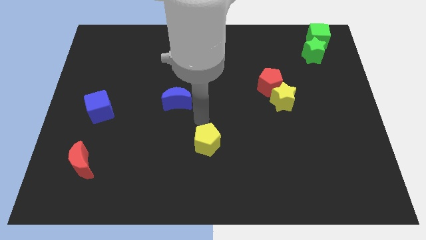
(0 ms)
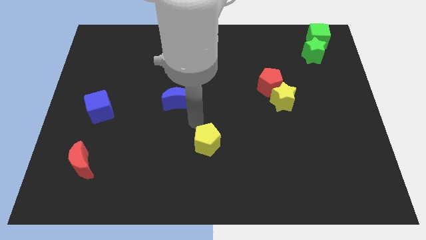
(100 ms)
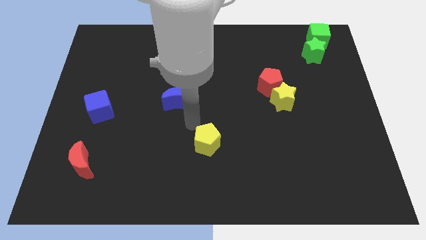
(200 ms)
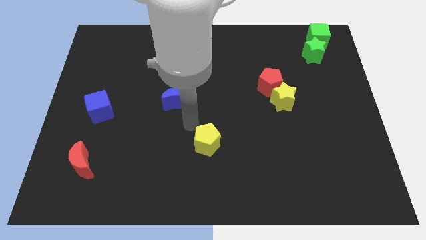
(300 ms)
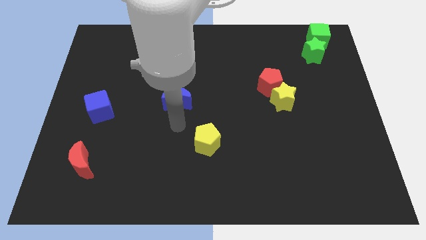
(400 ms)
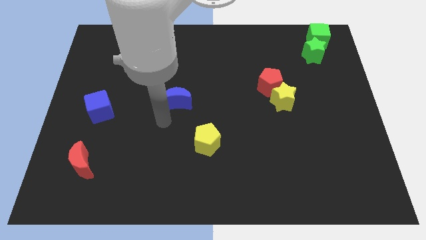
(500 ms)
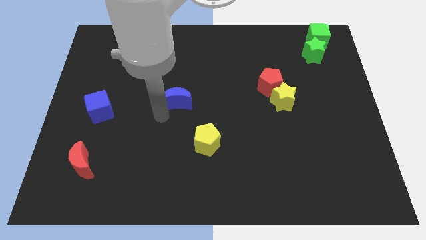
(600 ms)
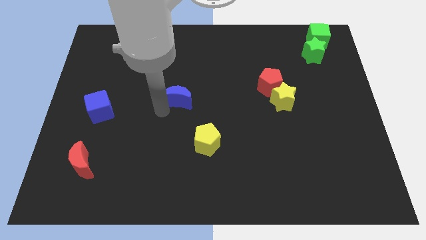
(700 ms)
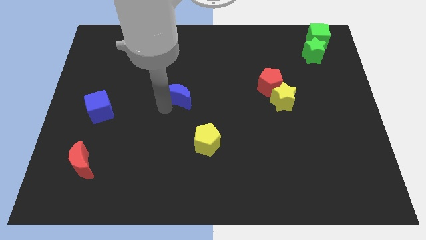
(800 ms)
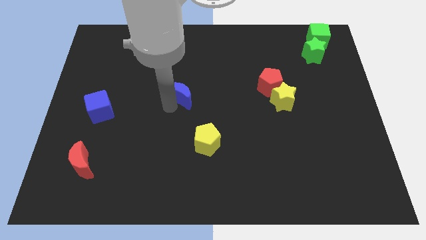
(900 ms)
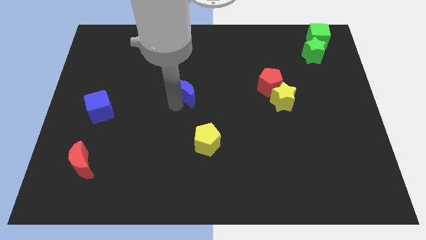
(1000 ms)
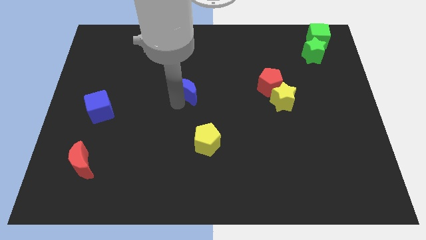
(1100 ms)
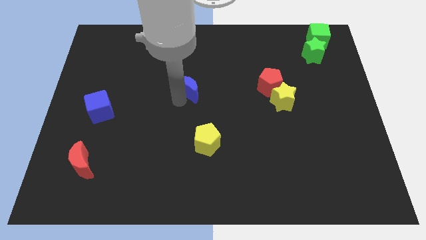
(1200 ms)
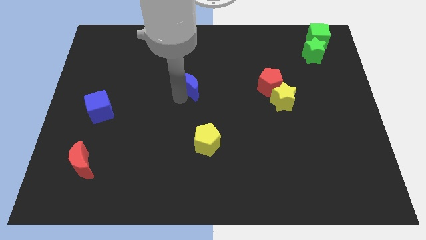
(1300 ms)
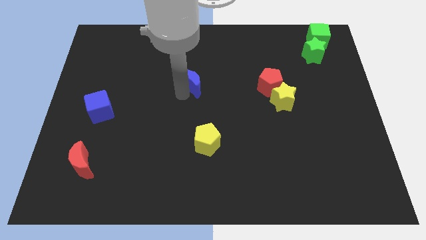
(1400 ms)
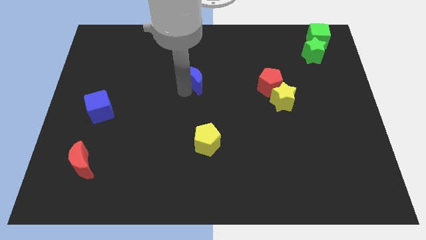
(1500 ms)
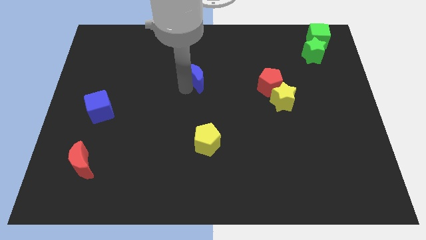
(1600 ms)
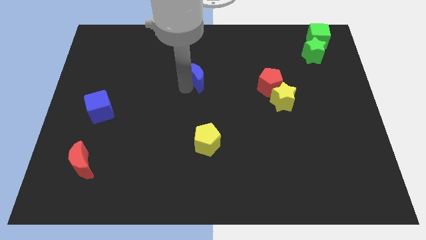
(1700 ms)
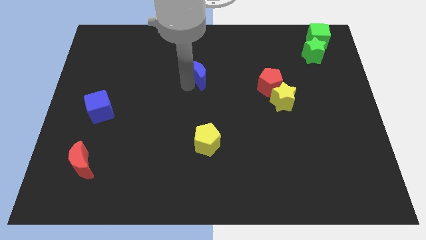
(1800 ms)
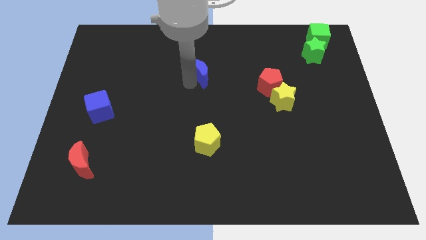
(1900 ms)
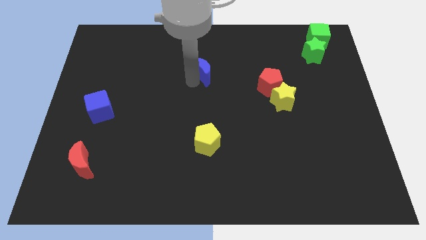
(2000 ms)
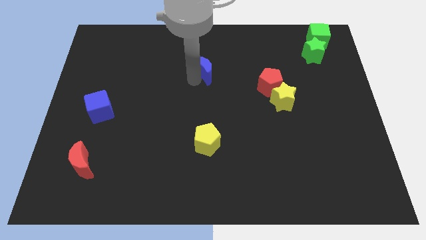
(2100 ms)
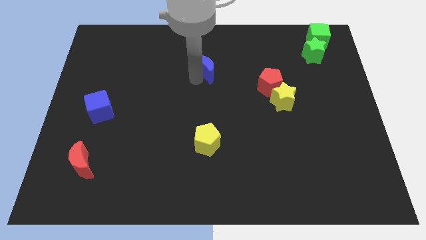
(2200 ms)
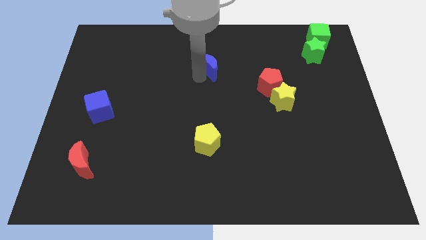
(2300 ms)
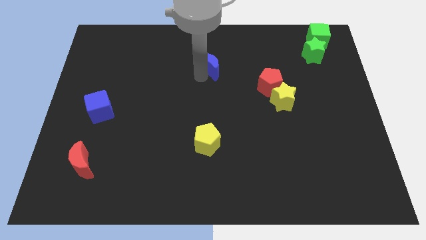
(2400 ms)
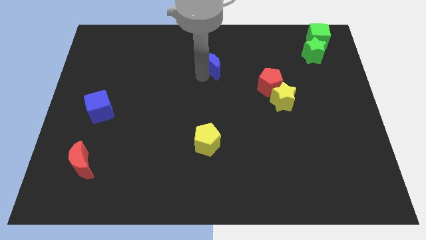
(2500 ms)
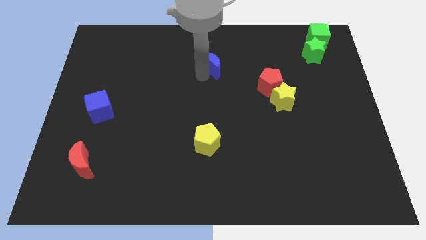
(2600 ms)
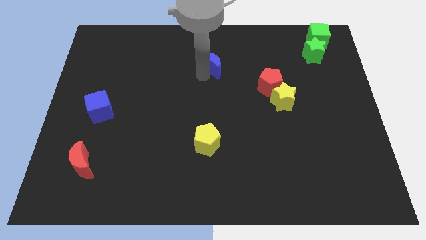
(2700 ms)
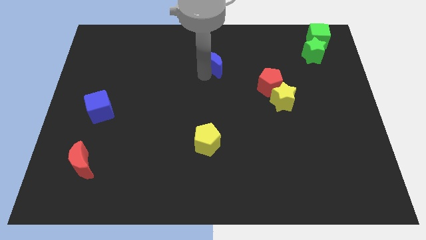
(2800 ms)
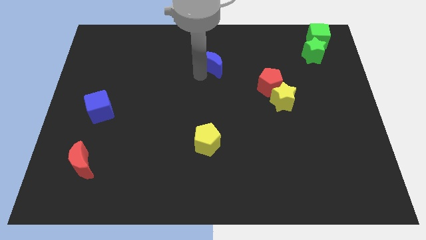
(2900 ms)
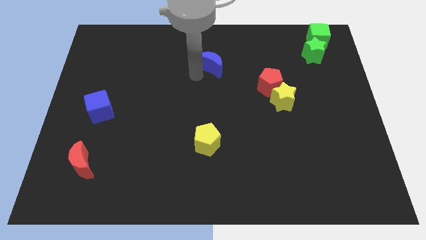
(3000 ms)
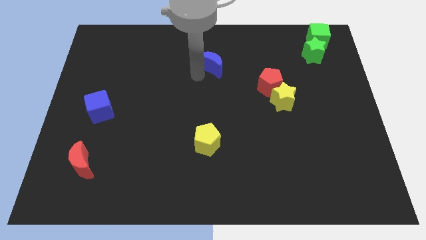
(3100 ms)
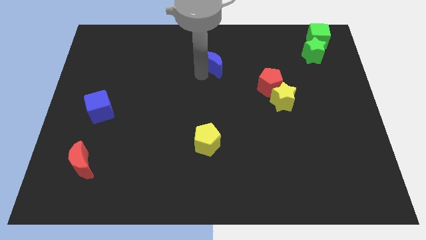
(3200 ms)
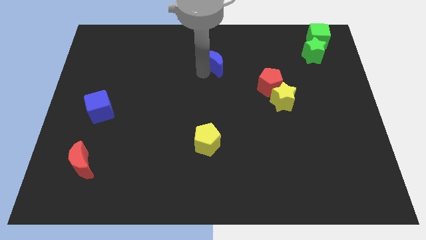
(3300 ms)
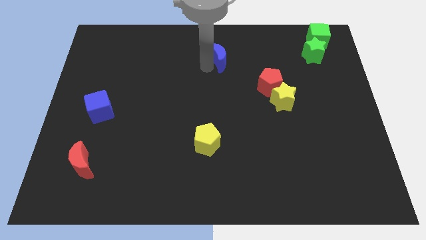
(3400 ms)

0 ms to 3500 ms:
move the blue crescent towards the top centre of the board

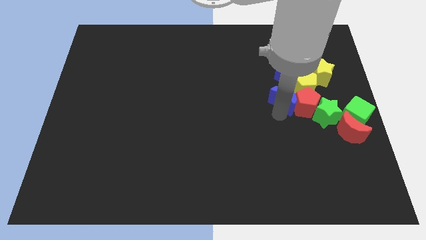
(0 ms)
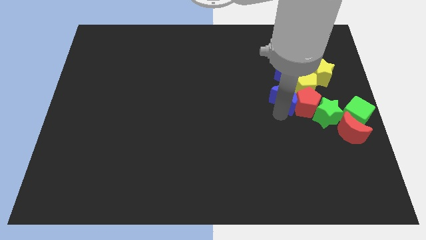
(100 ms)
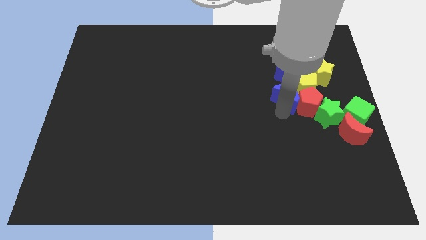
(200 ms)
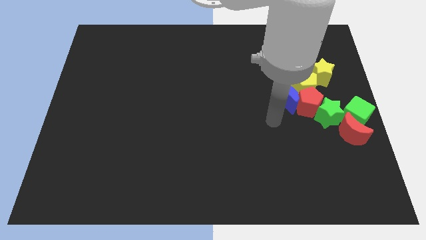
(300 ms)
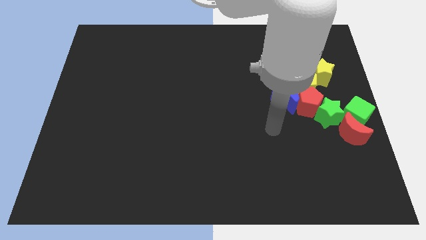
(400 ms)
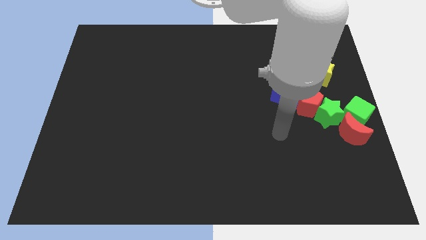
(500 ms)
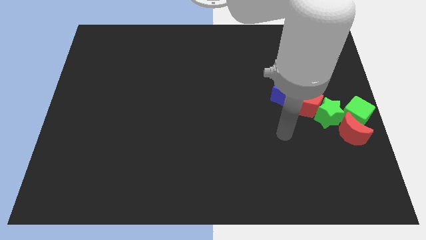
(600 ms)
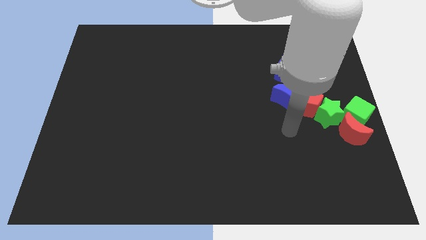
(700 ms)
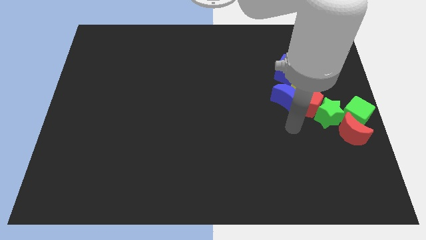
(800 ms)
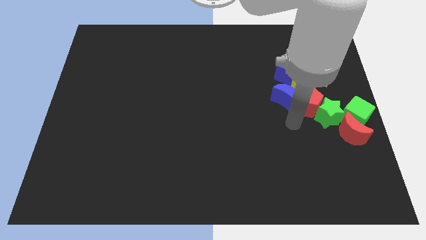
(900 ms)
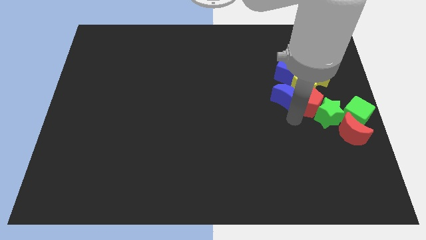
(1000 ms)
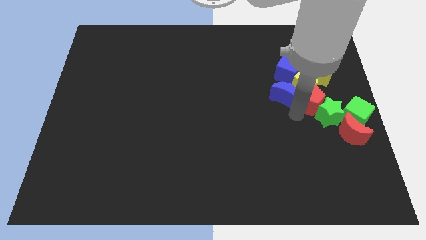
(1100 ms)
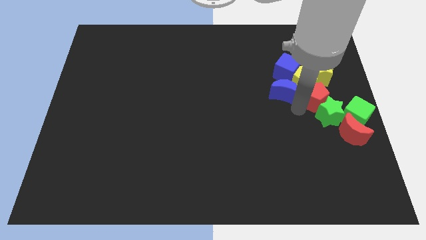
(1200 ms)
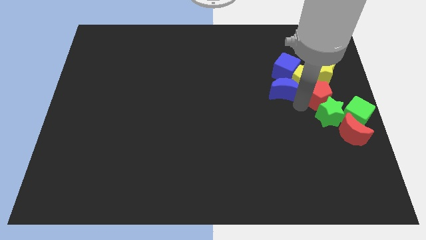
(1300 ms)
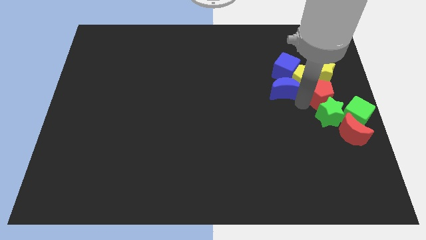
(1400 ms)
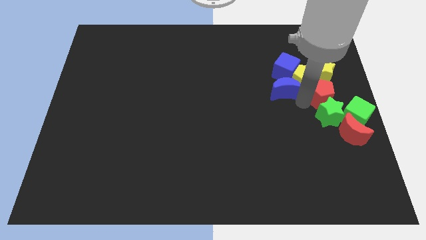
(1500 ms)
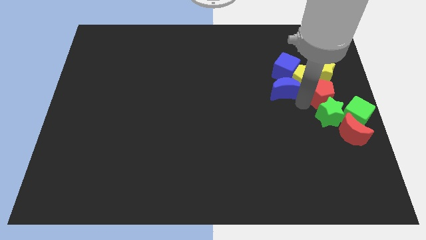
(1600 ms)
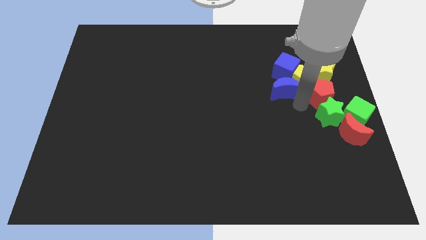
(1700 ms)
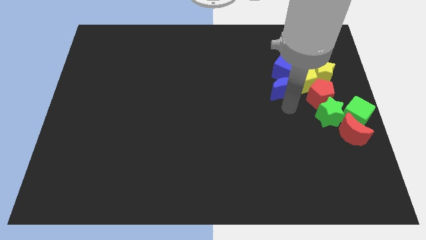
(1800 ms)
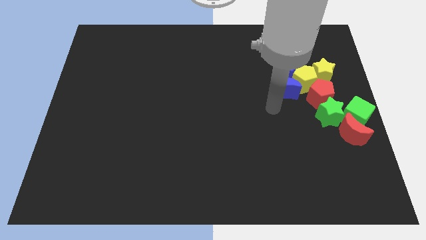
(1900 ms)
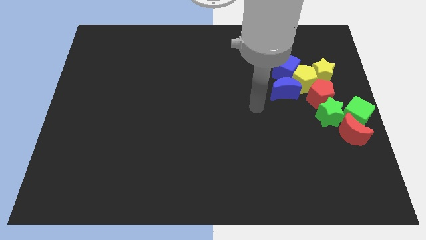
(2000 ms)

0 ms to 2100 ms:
separate the blue crescent and red pentagon

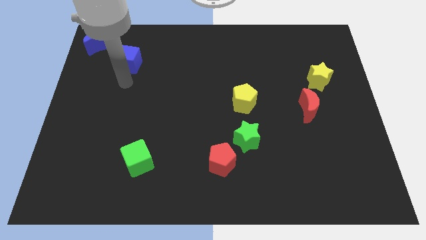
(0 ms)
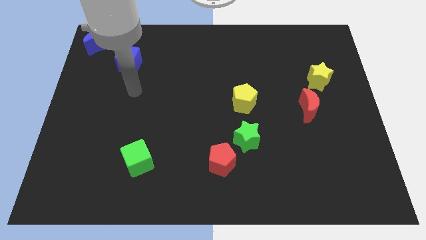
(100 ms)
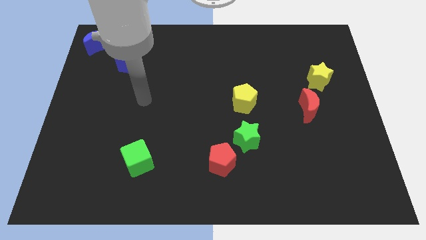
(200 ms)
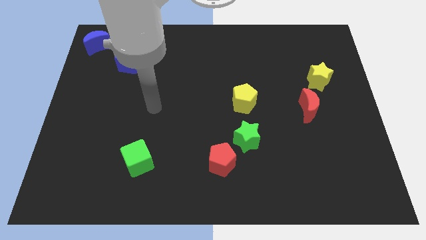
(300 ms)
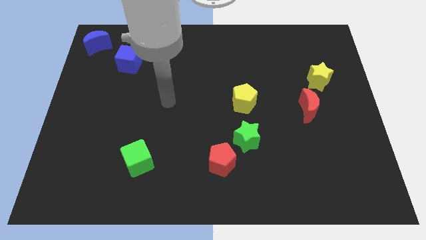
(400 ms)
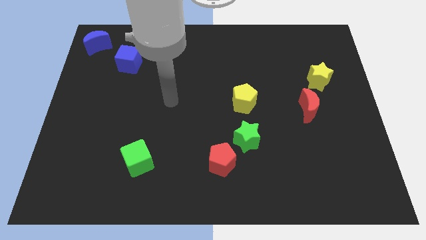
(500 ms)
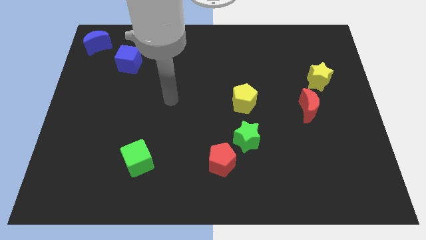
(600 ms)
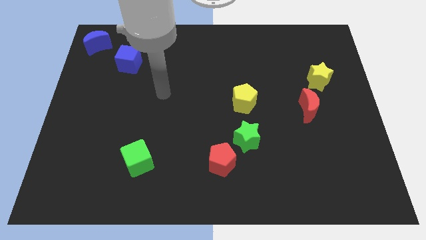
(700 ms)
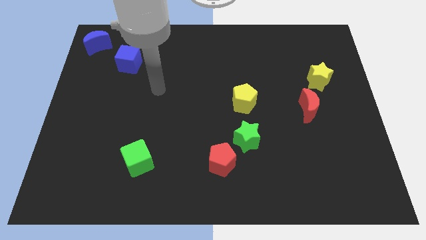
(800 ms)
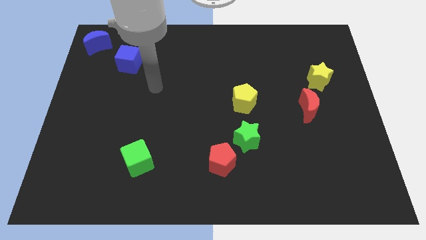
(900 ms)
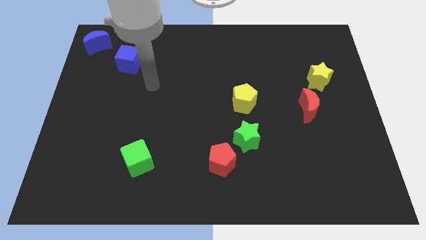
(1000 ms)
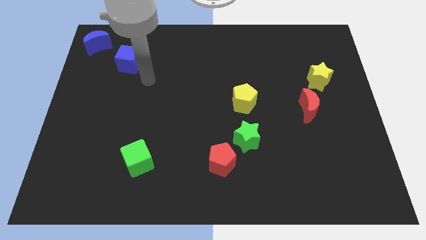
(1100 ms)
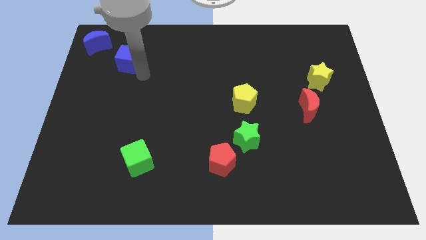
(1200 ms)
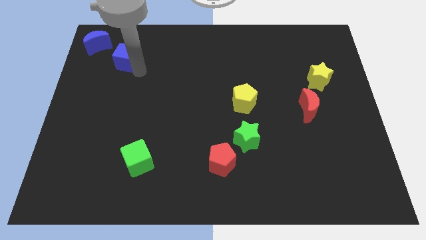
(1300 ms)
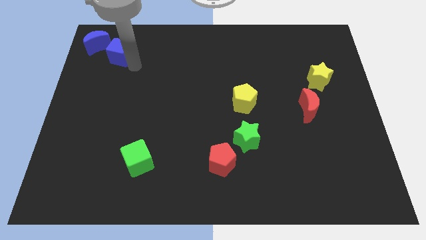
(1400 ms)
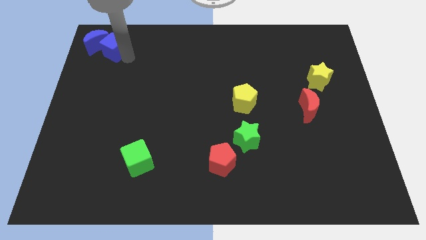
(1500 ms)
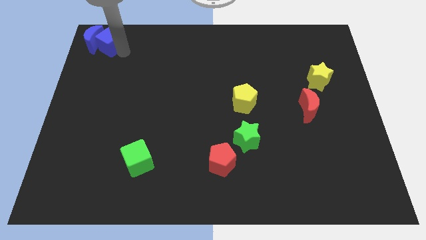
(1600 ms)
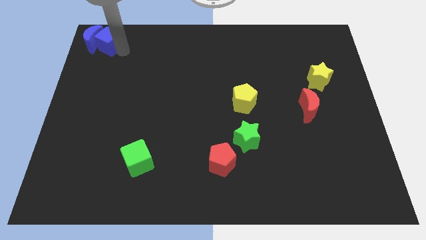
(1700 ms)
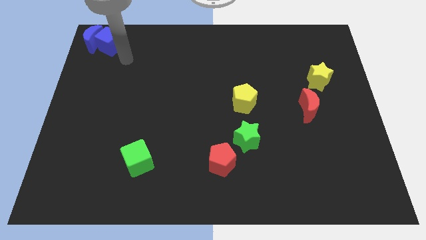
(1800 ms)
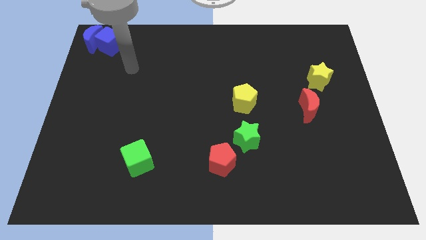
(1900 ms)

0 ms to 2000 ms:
move the blue cube to the right of the blue crescent

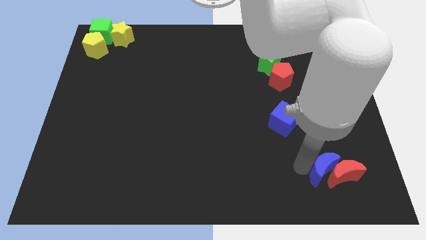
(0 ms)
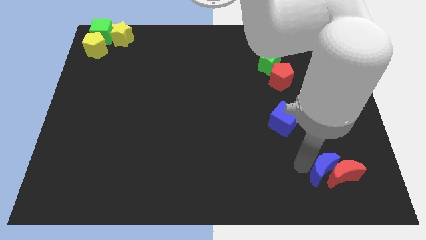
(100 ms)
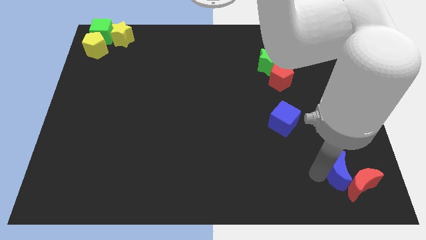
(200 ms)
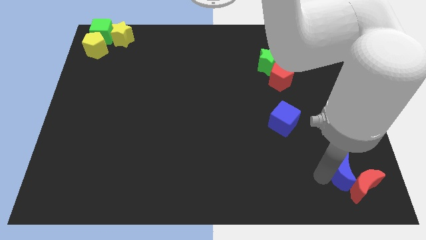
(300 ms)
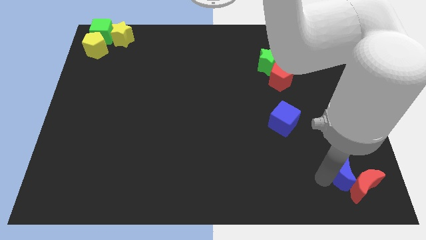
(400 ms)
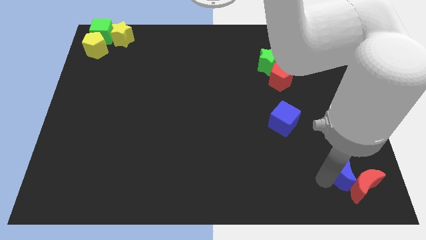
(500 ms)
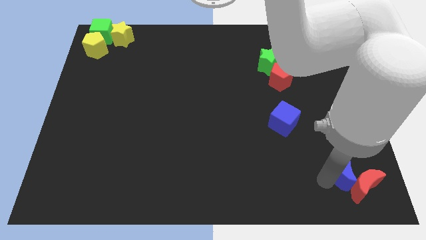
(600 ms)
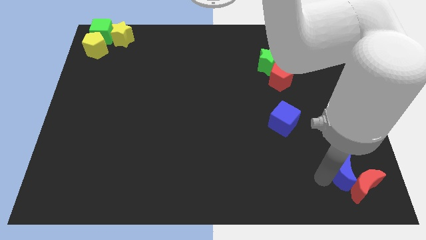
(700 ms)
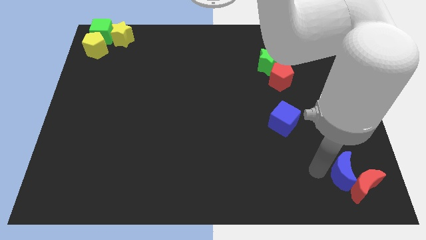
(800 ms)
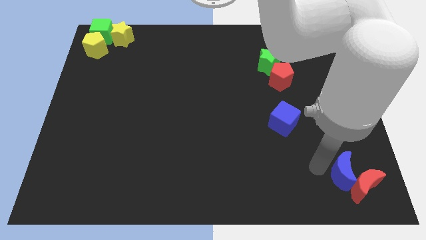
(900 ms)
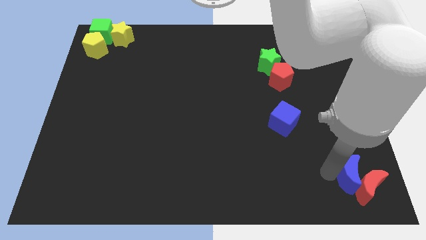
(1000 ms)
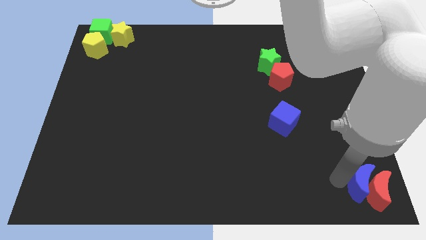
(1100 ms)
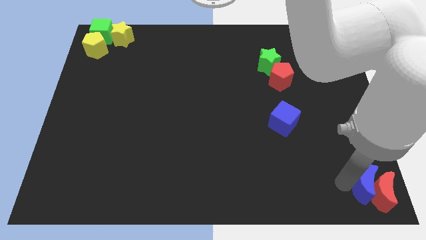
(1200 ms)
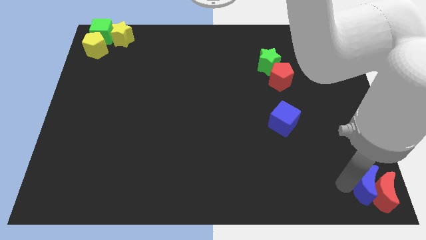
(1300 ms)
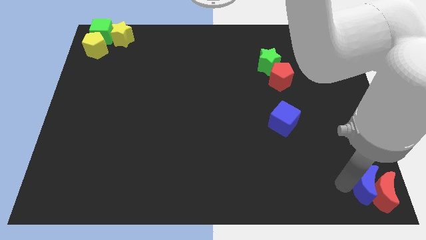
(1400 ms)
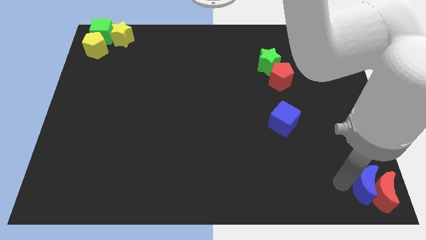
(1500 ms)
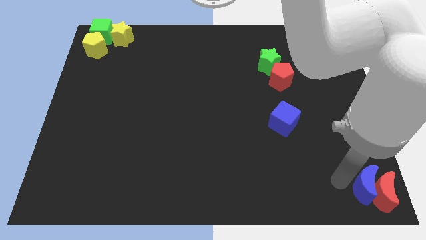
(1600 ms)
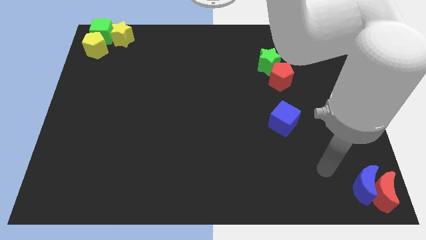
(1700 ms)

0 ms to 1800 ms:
group up the blue crescent and red crescent at the bottom right of the board
